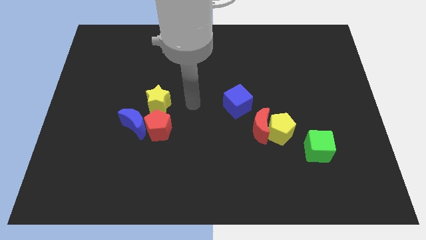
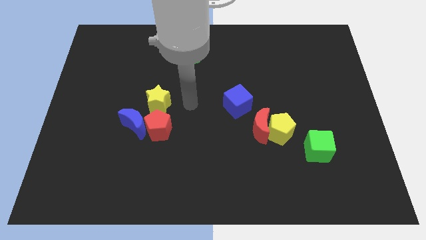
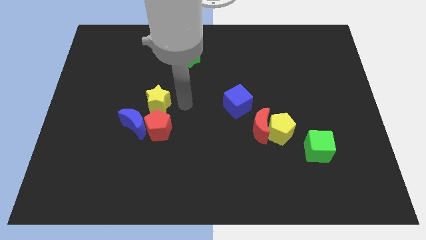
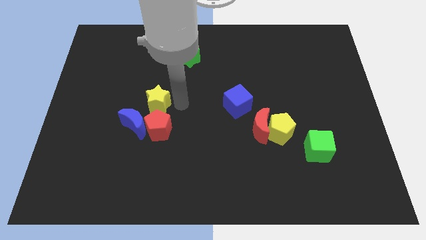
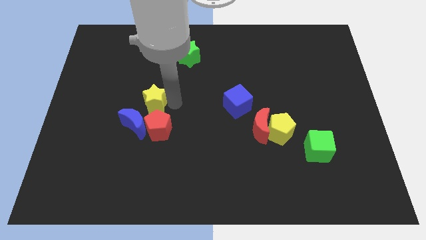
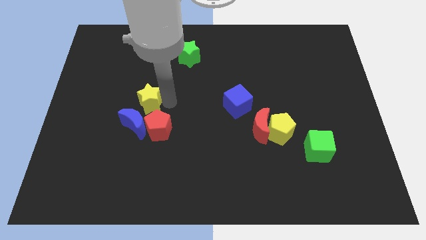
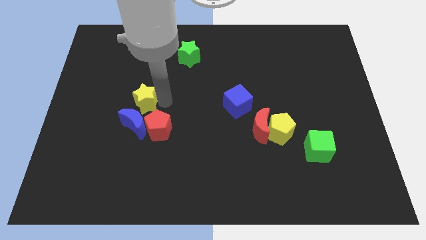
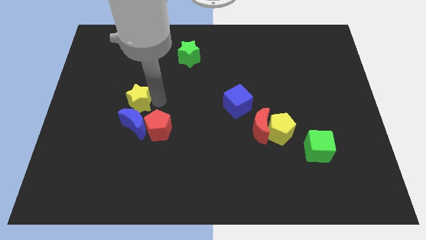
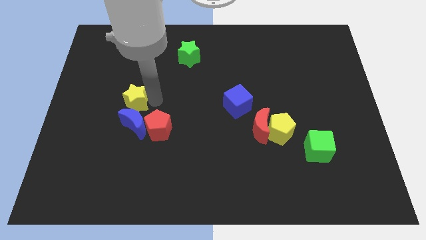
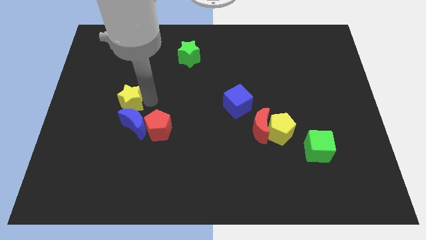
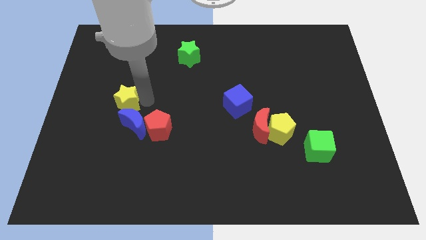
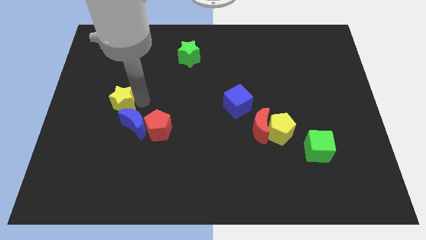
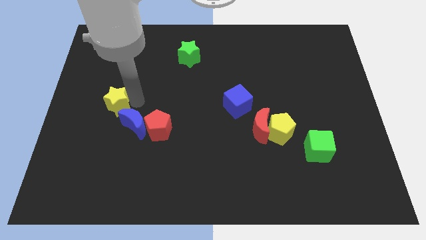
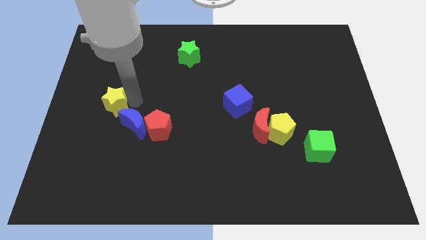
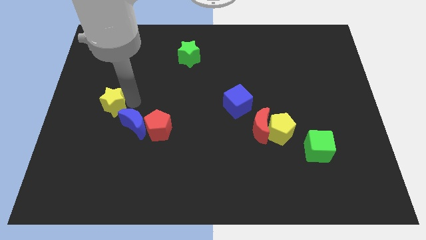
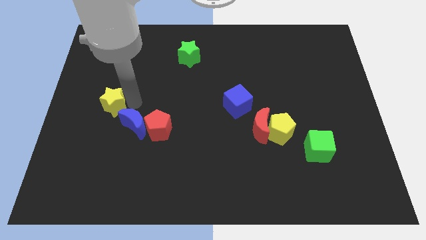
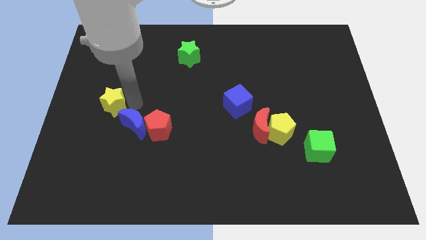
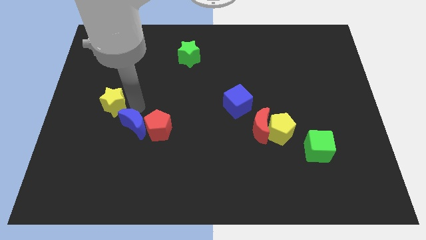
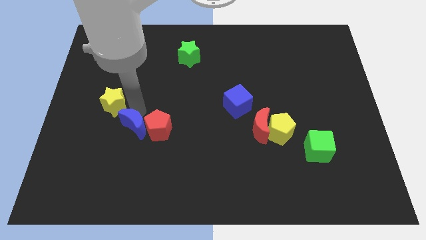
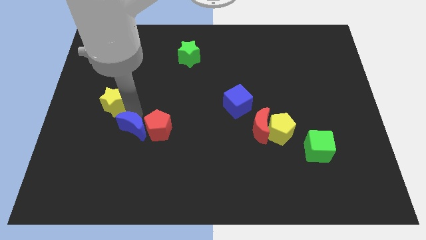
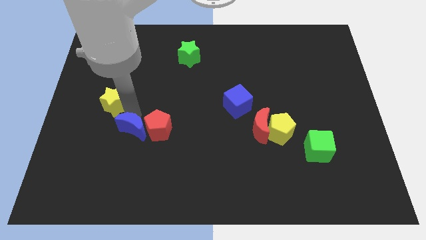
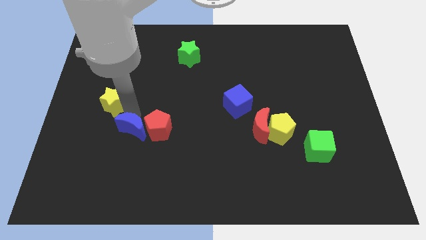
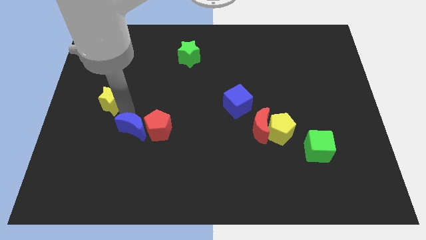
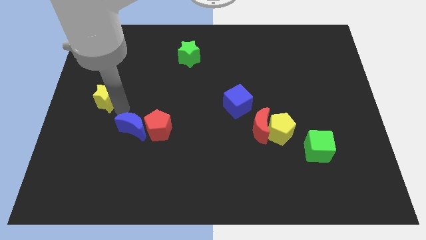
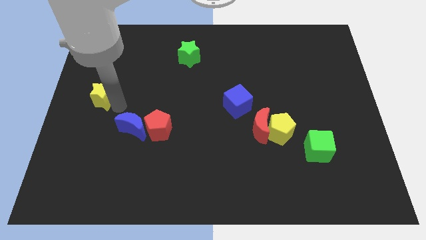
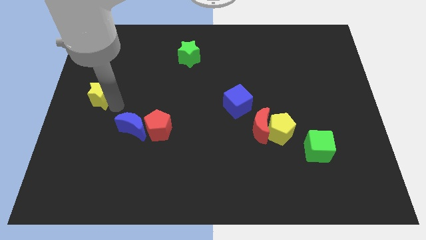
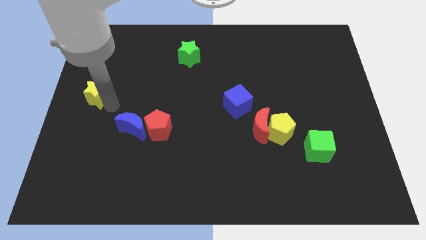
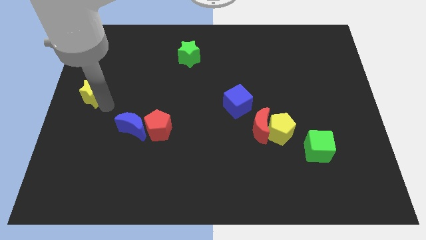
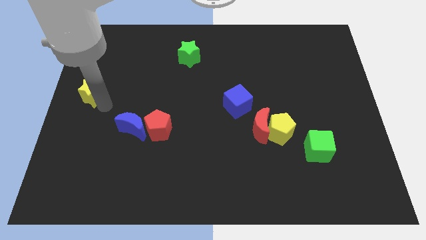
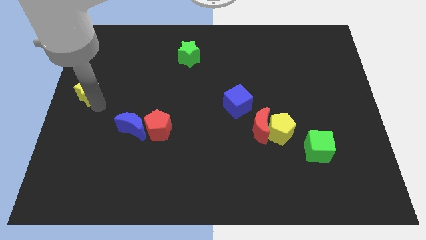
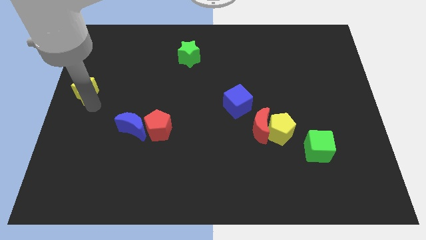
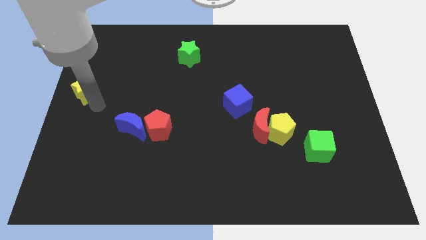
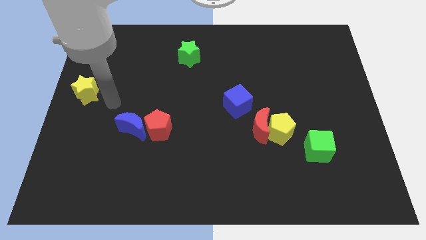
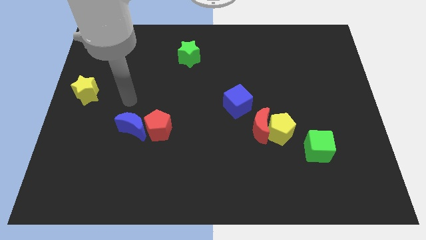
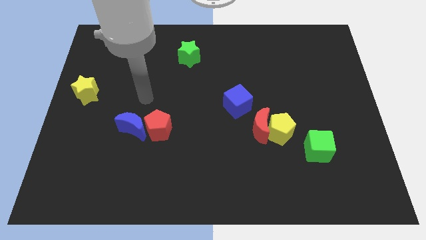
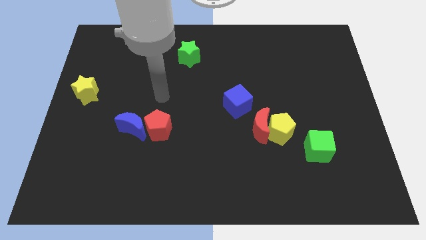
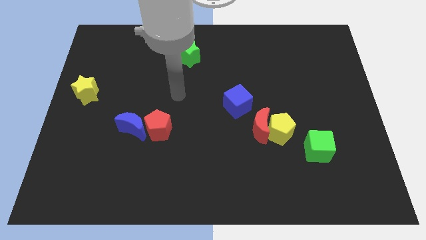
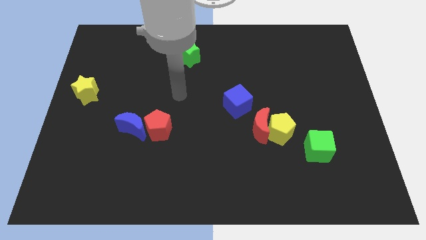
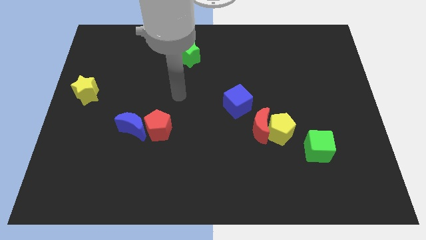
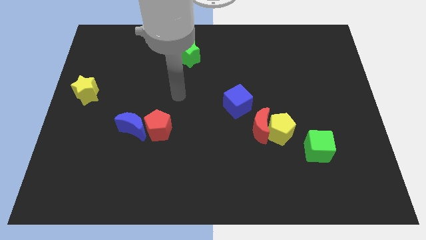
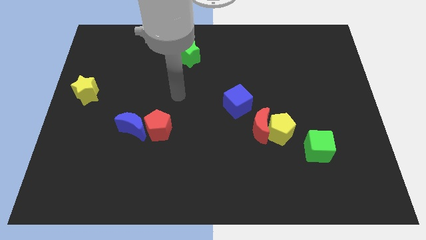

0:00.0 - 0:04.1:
place the yellow star to the center left of the board

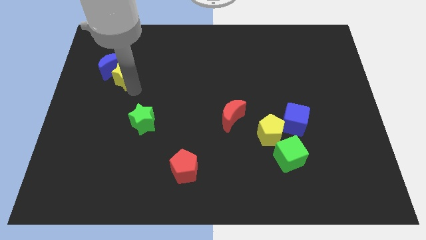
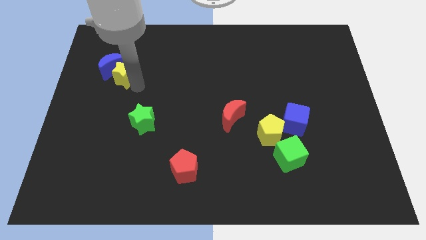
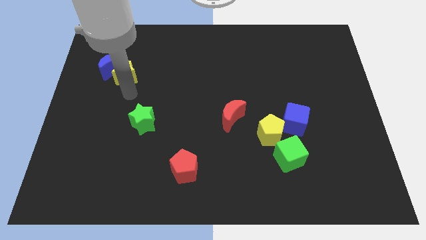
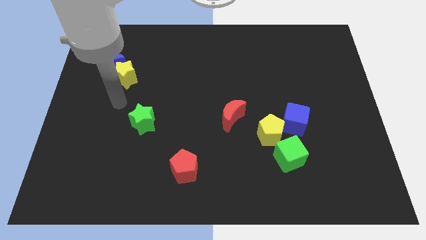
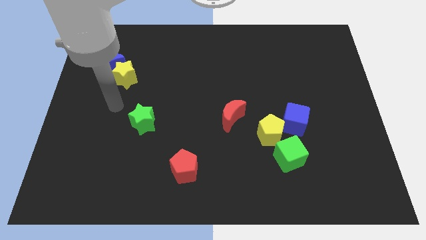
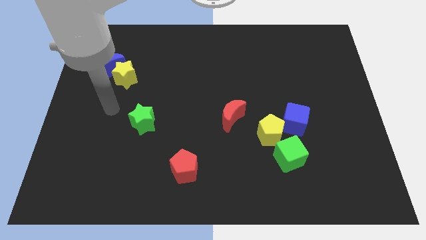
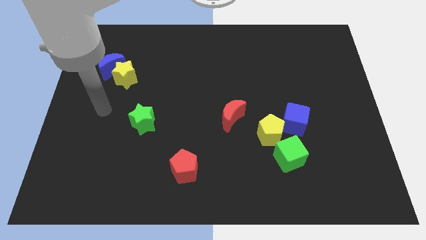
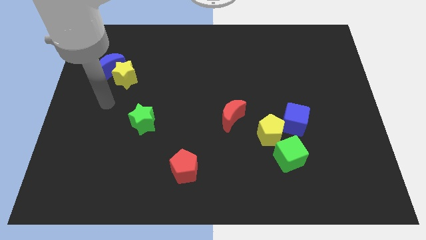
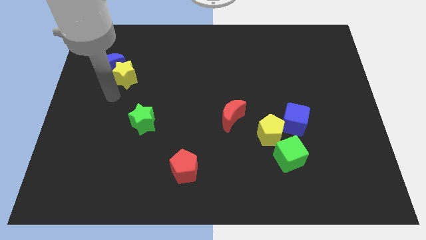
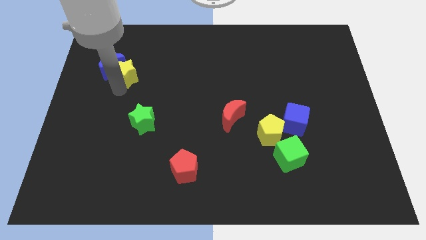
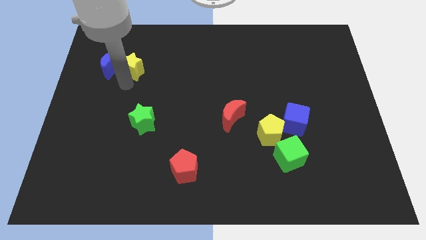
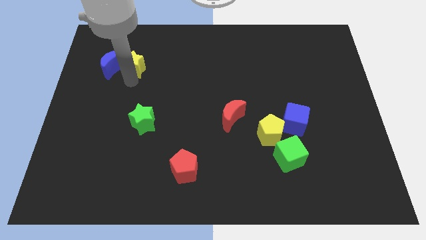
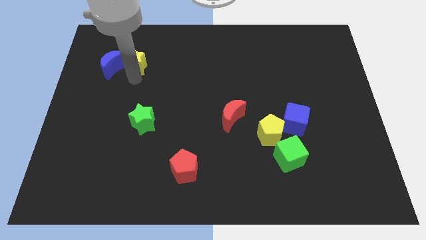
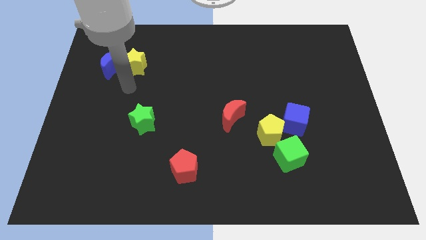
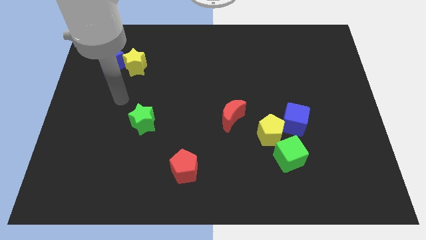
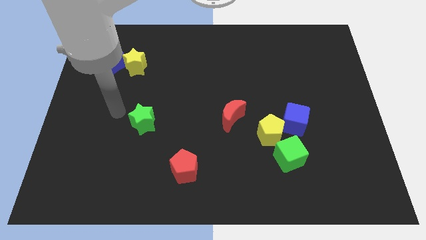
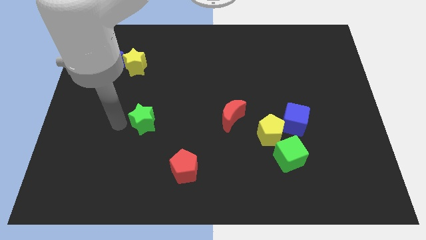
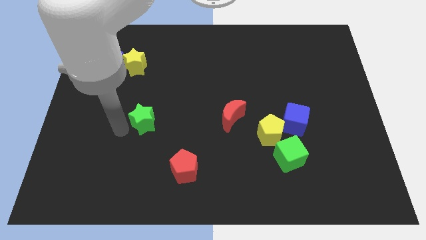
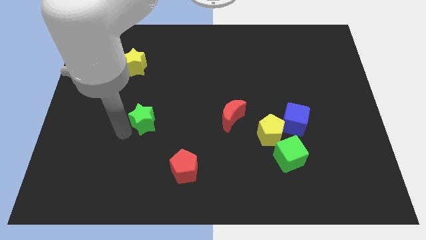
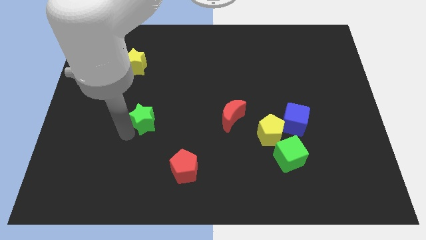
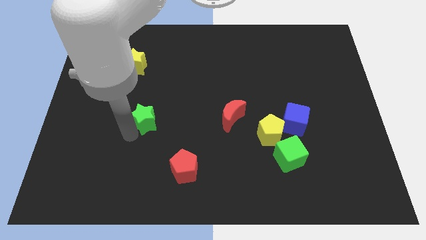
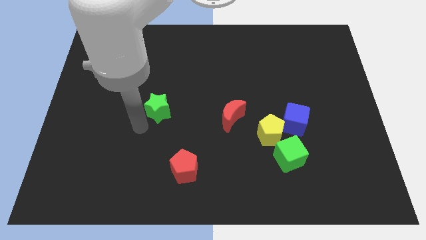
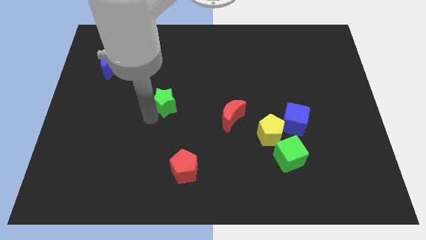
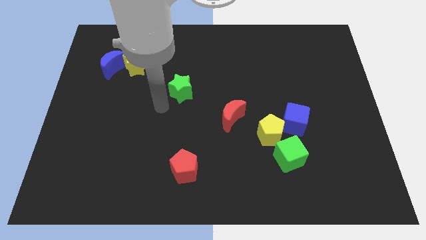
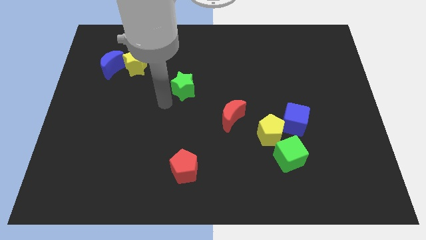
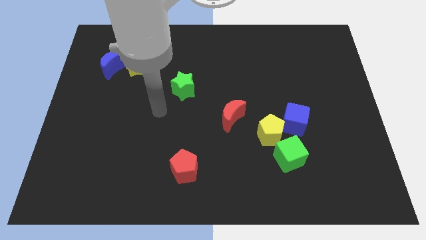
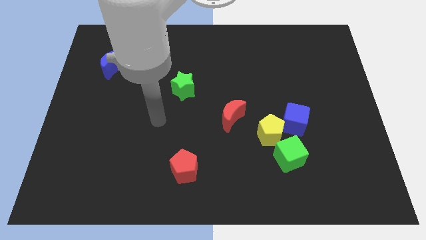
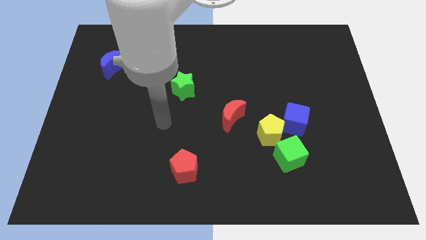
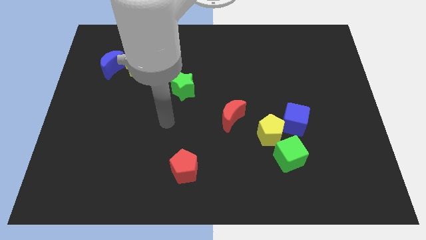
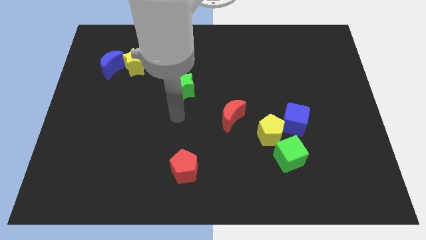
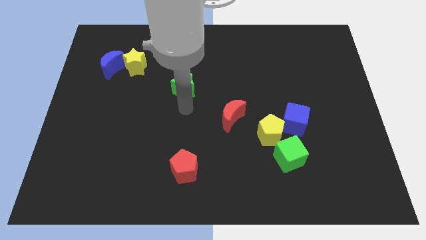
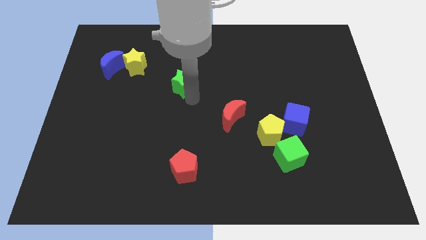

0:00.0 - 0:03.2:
move green star upwards

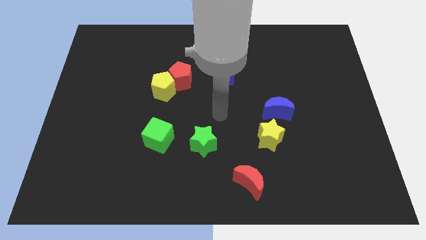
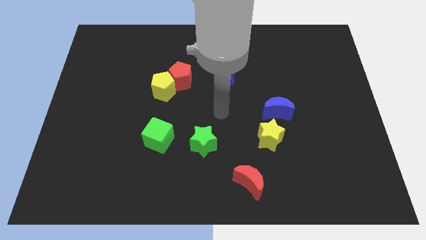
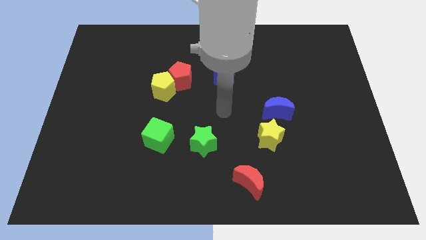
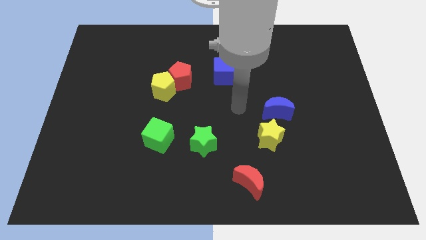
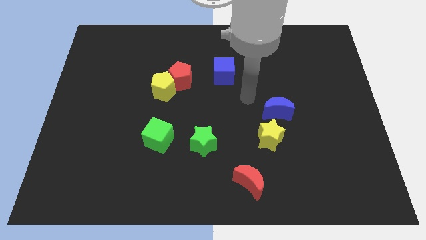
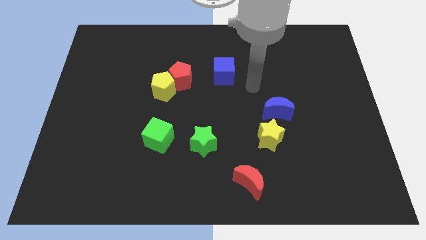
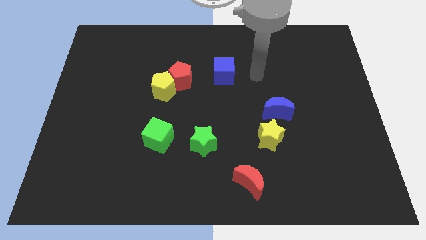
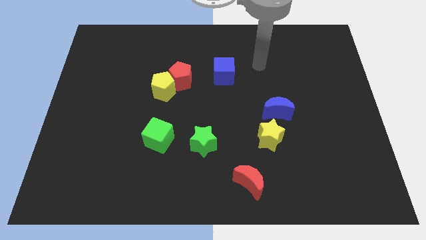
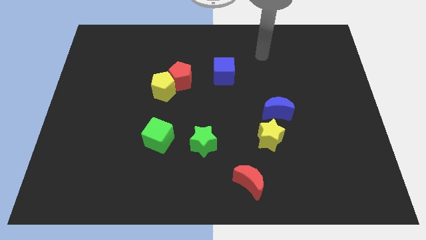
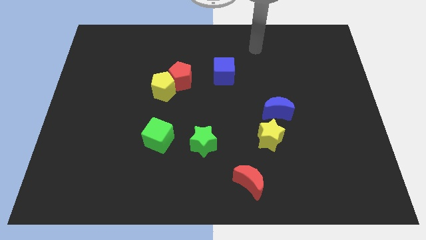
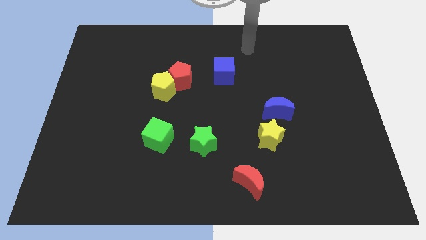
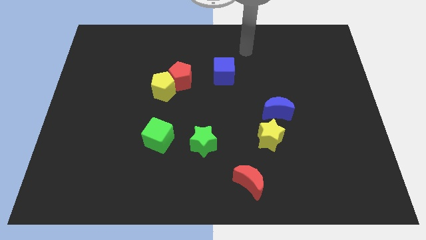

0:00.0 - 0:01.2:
move your arm towards top center

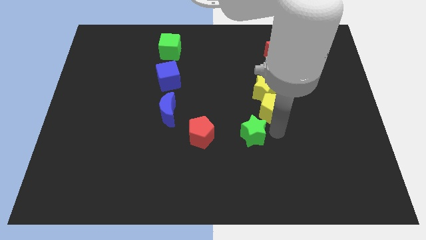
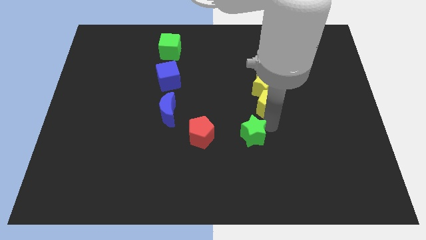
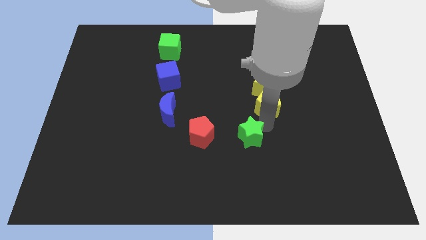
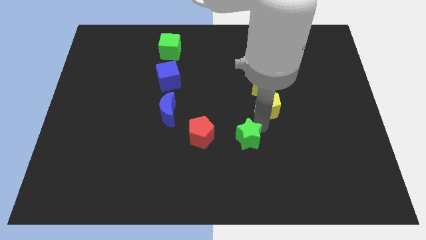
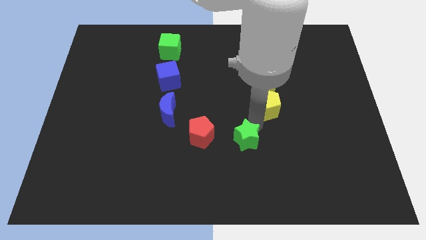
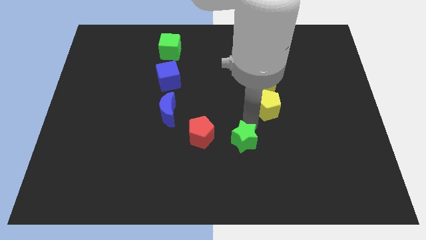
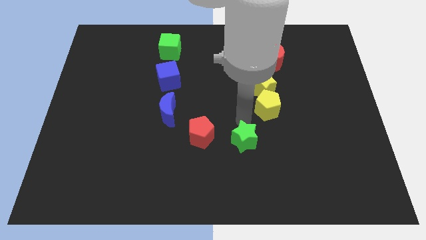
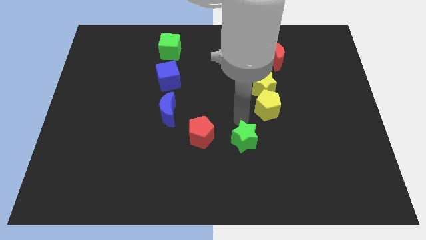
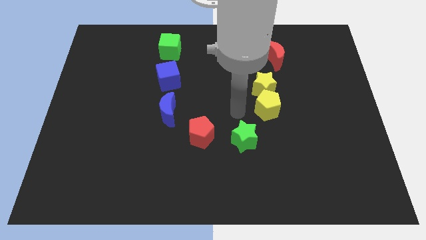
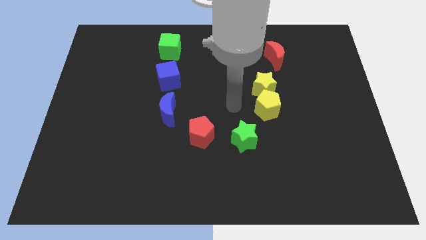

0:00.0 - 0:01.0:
separate green star from yellow pentagon
